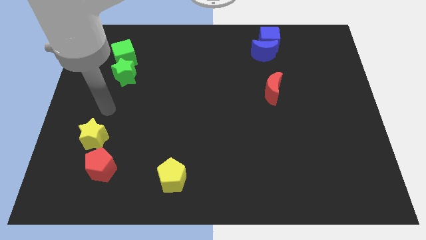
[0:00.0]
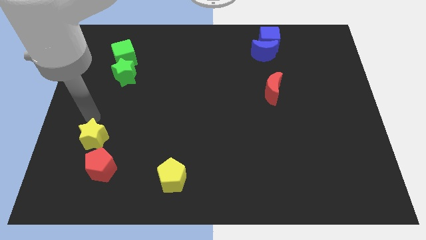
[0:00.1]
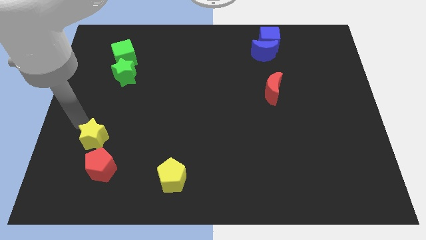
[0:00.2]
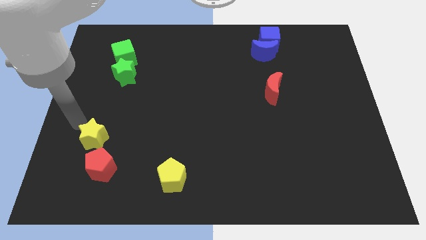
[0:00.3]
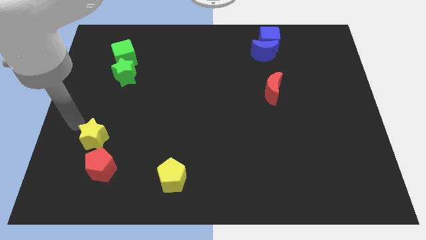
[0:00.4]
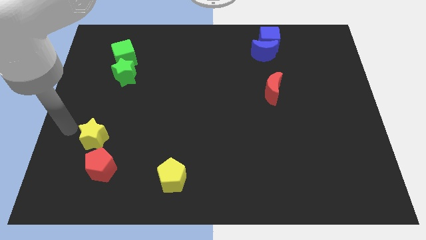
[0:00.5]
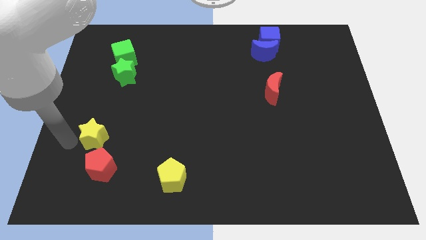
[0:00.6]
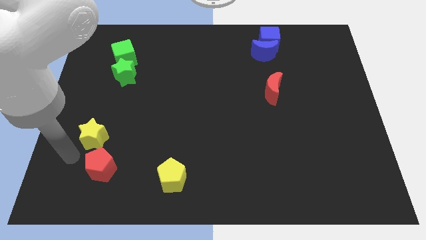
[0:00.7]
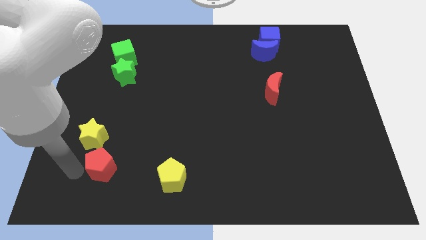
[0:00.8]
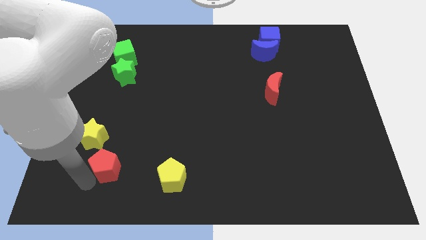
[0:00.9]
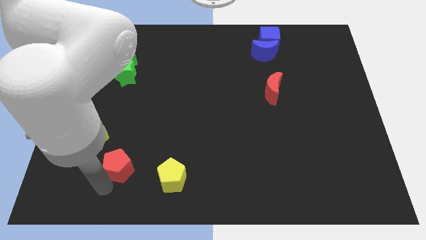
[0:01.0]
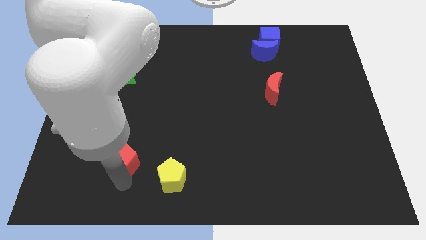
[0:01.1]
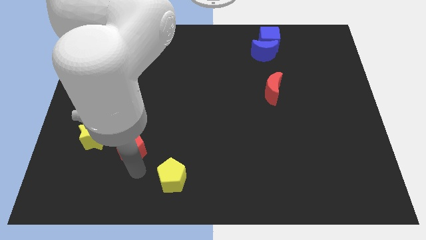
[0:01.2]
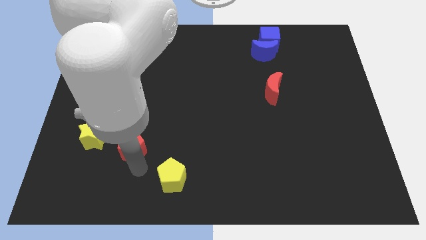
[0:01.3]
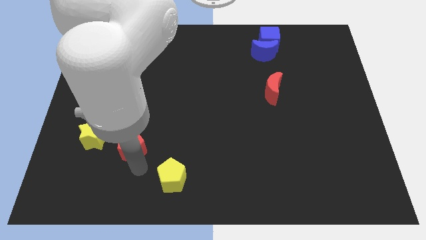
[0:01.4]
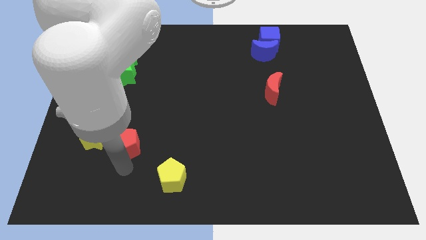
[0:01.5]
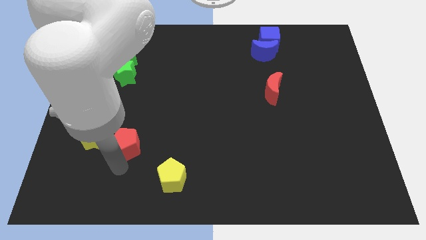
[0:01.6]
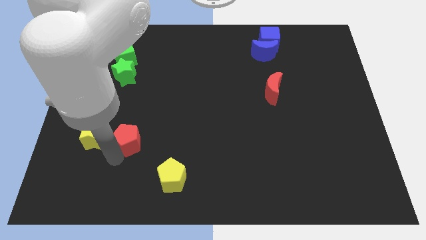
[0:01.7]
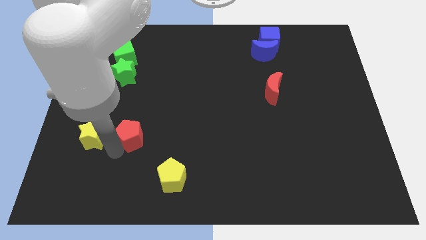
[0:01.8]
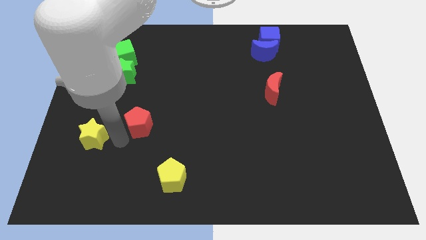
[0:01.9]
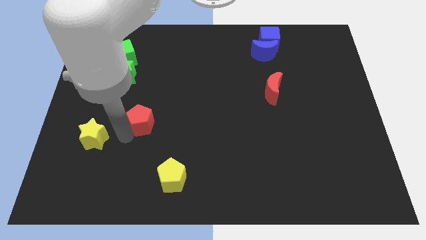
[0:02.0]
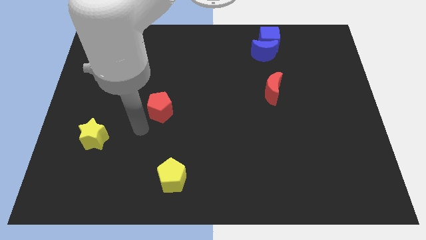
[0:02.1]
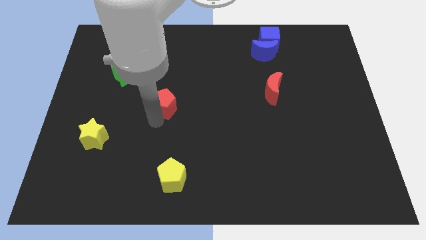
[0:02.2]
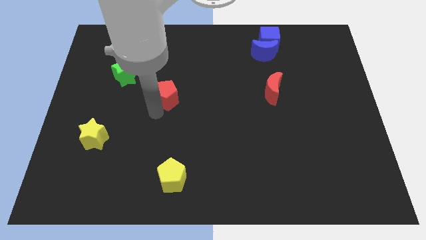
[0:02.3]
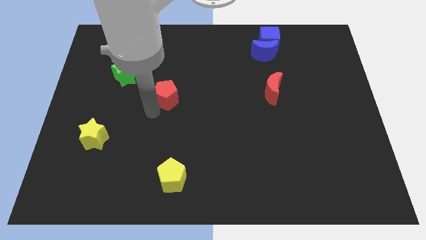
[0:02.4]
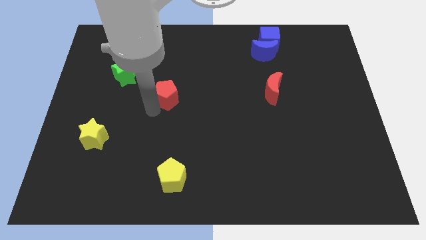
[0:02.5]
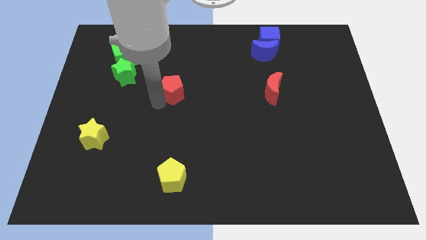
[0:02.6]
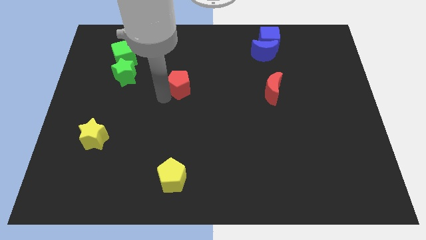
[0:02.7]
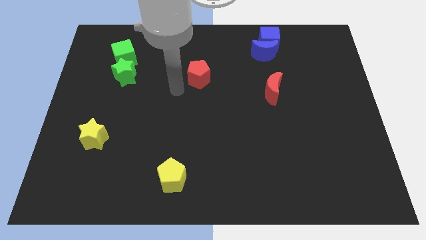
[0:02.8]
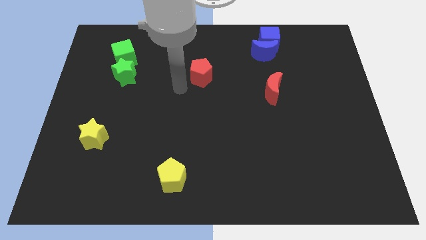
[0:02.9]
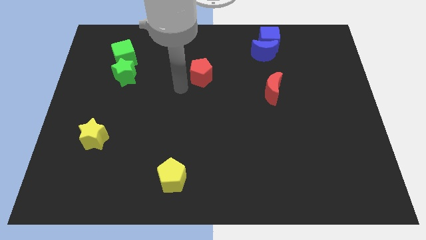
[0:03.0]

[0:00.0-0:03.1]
move the red pentagon parallel to the right side of green star

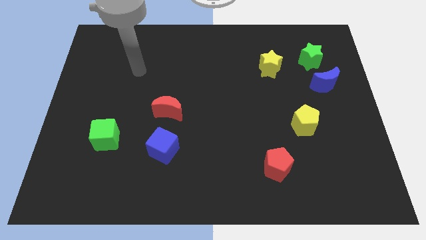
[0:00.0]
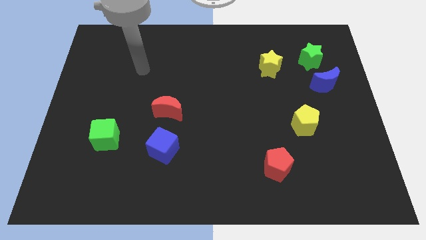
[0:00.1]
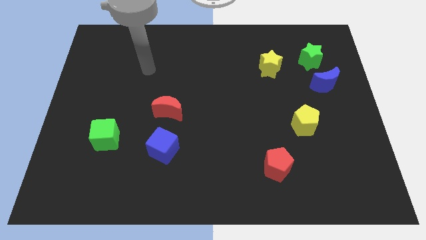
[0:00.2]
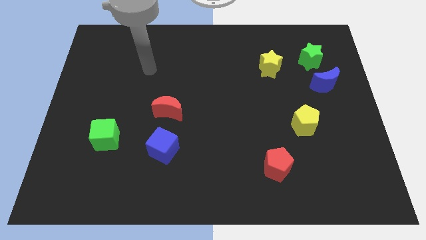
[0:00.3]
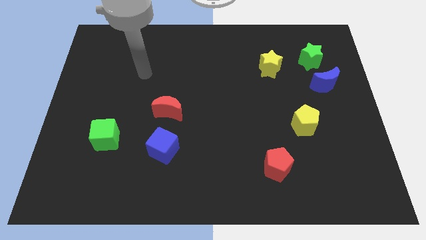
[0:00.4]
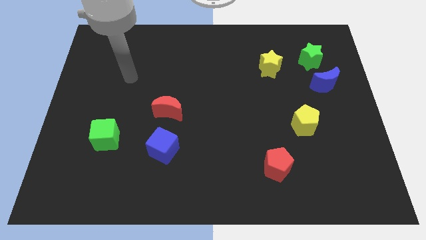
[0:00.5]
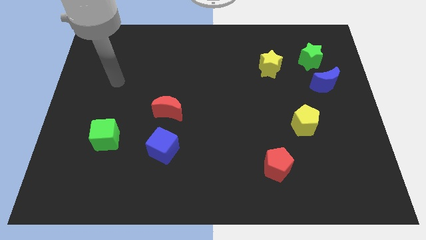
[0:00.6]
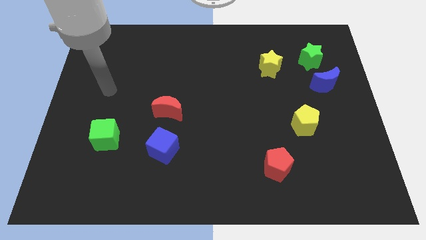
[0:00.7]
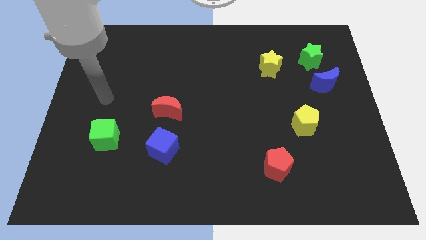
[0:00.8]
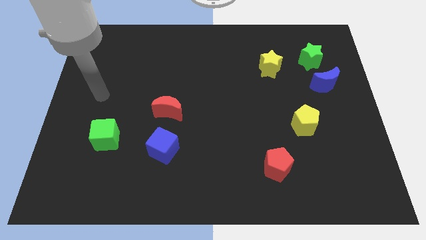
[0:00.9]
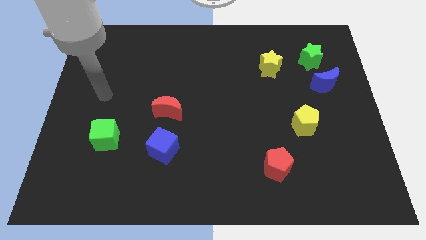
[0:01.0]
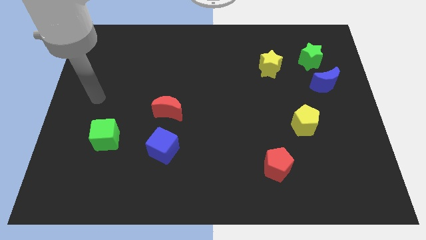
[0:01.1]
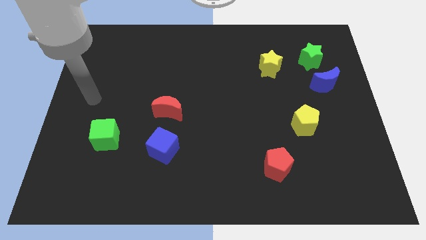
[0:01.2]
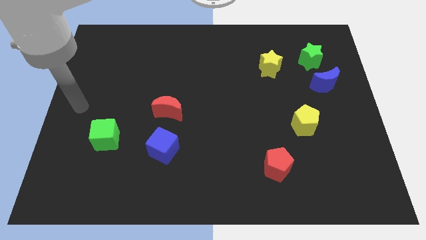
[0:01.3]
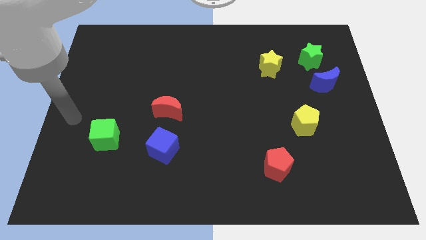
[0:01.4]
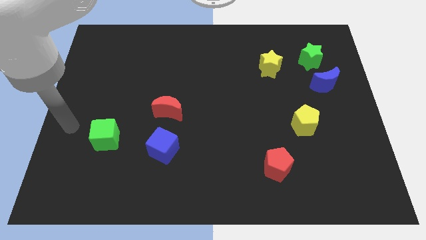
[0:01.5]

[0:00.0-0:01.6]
go and point your arm at the left of the green cube

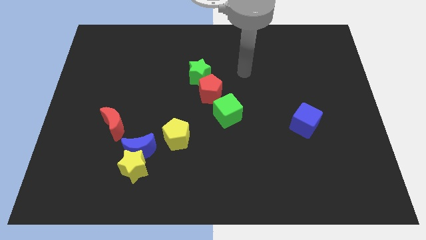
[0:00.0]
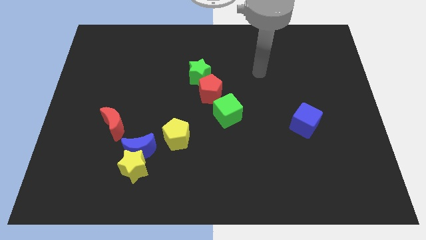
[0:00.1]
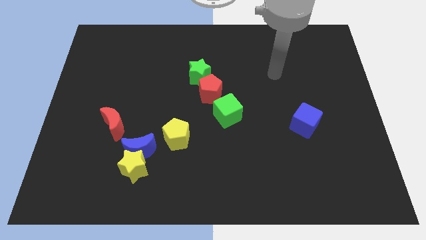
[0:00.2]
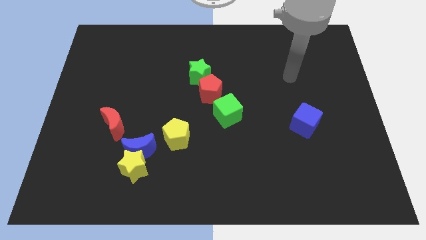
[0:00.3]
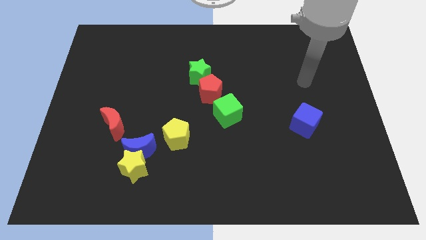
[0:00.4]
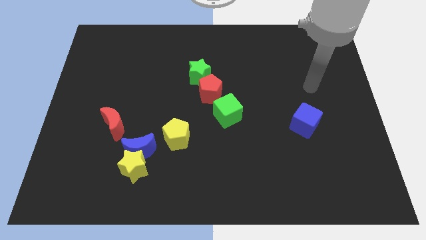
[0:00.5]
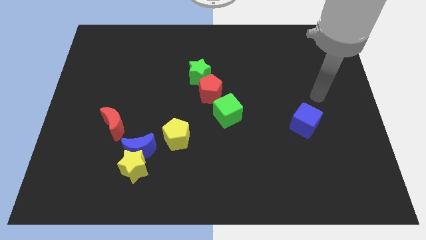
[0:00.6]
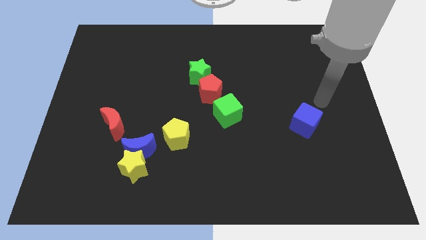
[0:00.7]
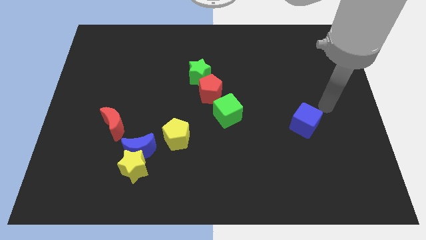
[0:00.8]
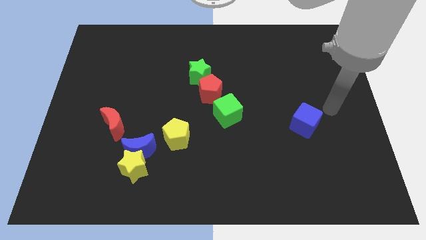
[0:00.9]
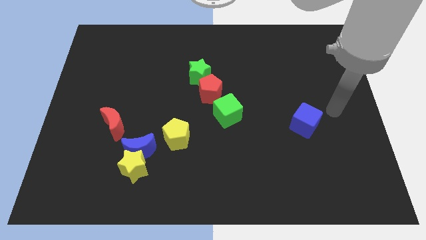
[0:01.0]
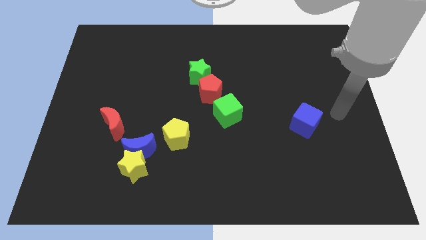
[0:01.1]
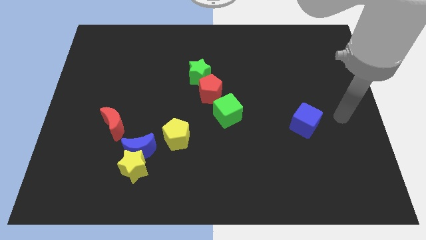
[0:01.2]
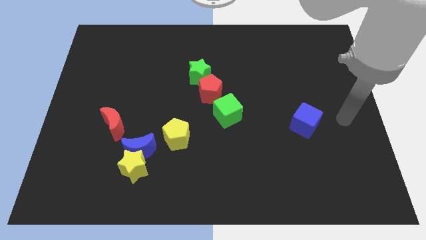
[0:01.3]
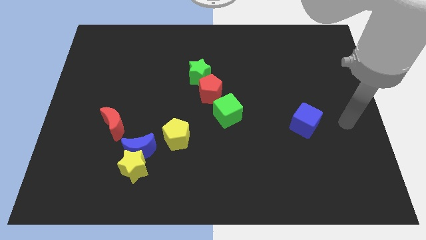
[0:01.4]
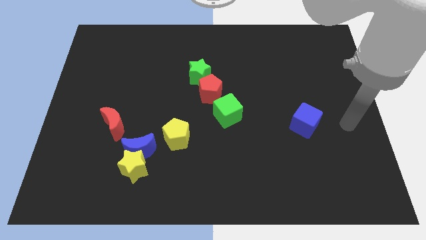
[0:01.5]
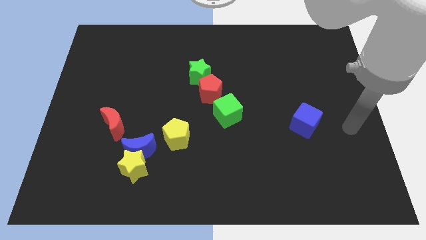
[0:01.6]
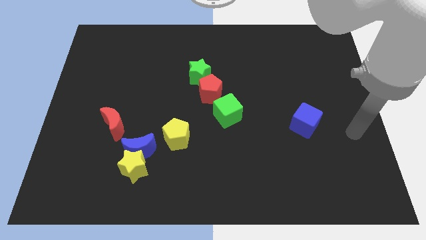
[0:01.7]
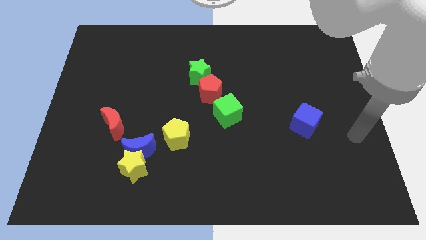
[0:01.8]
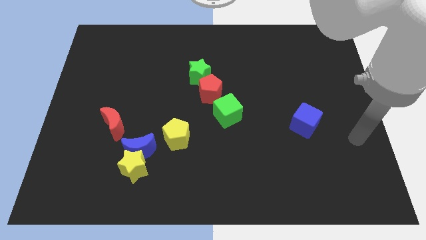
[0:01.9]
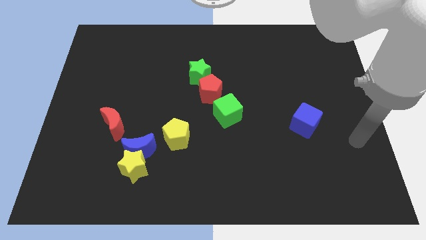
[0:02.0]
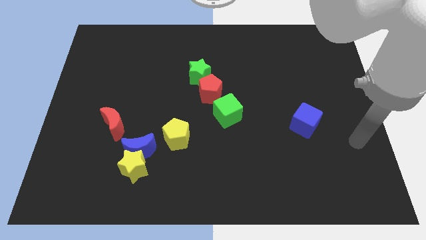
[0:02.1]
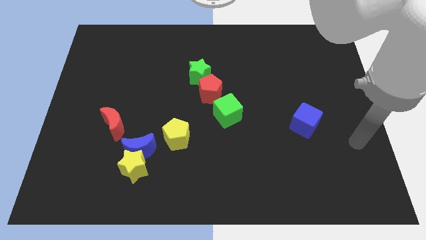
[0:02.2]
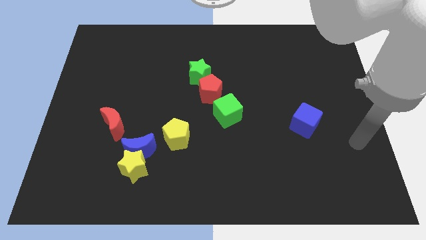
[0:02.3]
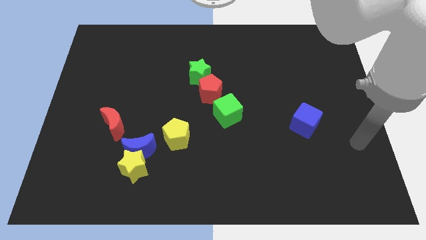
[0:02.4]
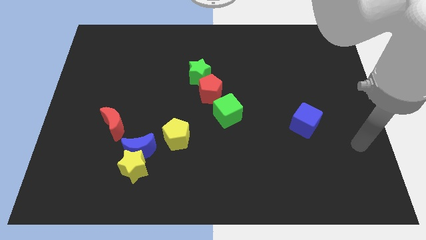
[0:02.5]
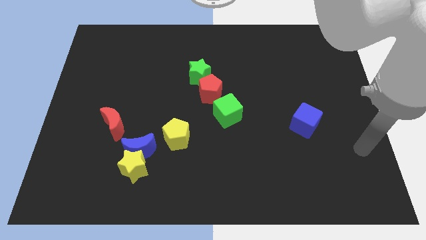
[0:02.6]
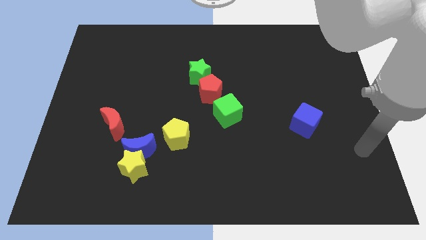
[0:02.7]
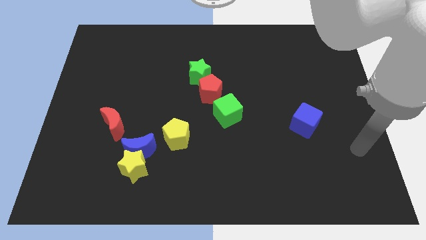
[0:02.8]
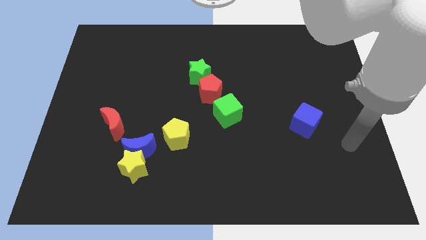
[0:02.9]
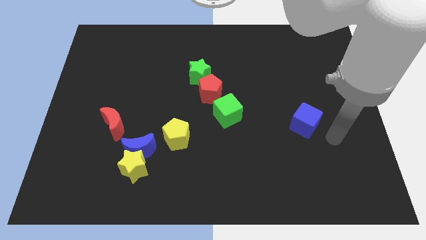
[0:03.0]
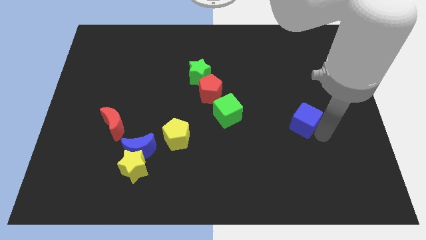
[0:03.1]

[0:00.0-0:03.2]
move your arm to the right side of blue cube

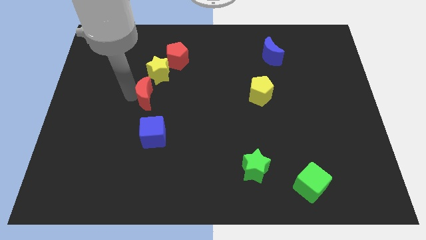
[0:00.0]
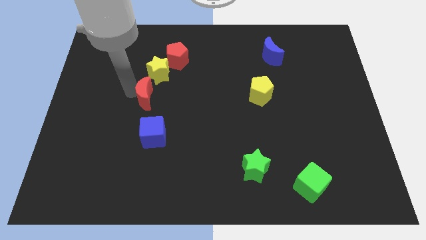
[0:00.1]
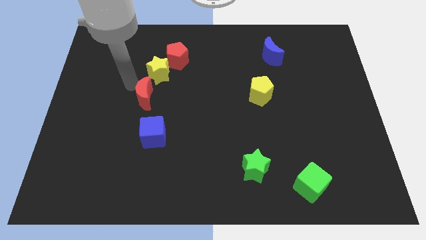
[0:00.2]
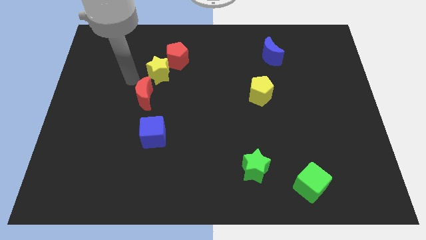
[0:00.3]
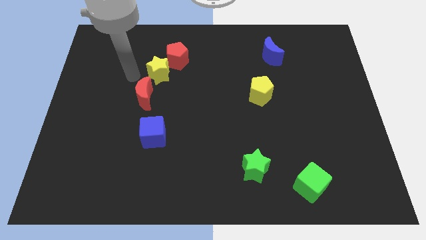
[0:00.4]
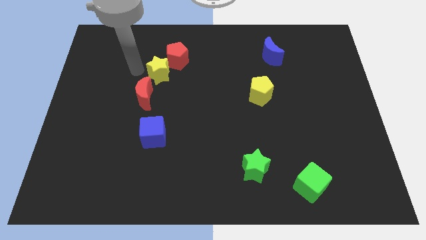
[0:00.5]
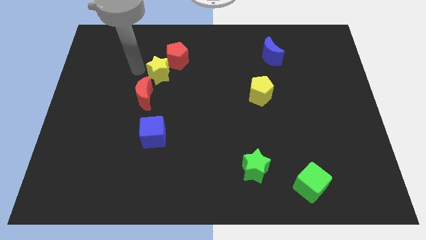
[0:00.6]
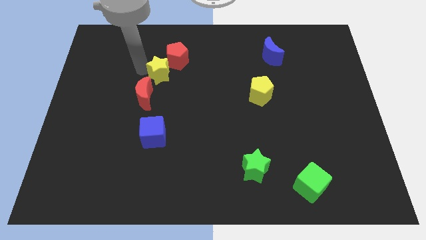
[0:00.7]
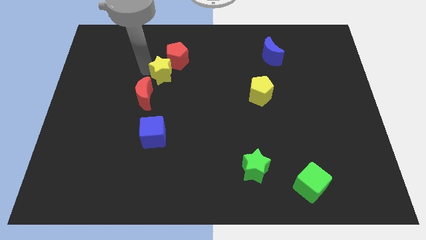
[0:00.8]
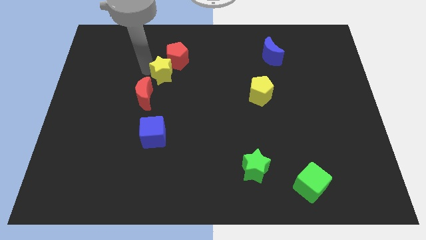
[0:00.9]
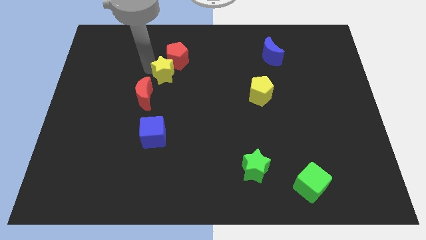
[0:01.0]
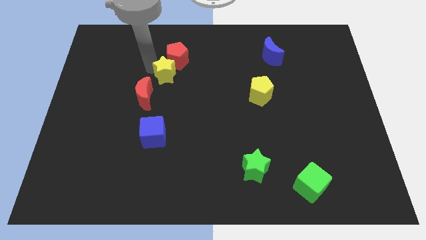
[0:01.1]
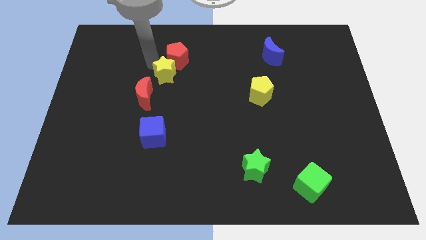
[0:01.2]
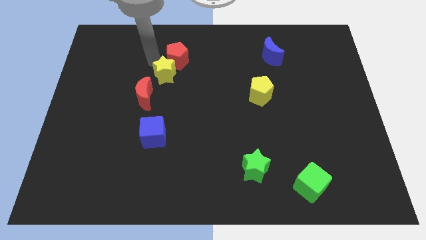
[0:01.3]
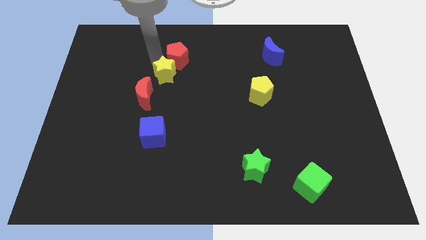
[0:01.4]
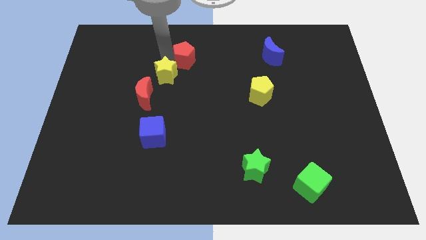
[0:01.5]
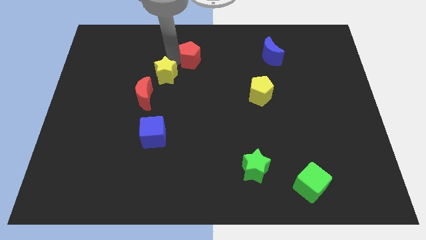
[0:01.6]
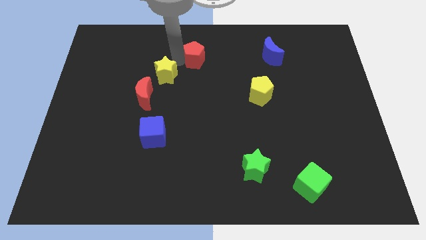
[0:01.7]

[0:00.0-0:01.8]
slightly push the red pentagon
